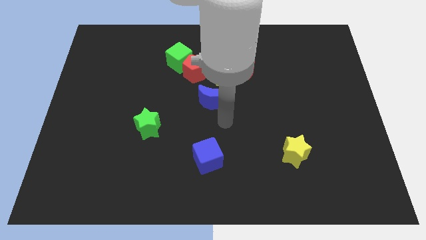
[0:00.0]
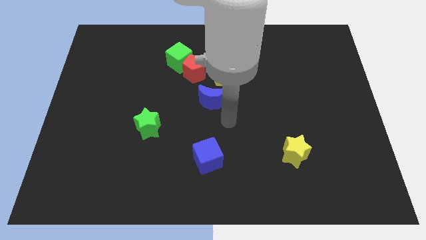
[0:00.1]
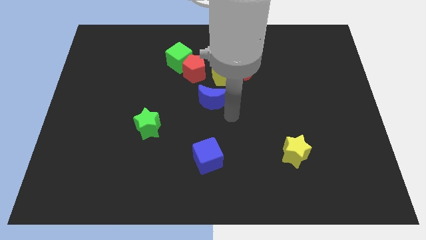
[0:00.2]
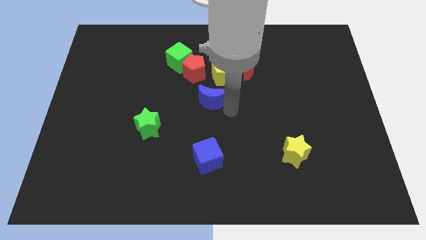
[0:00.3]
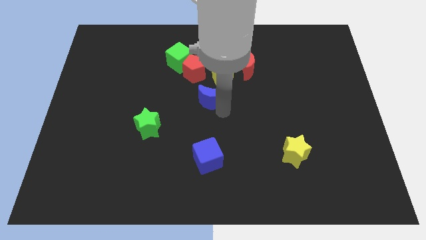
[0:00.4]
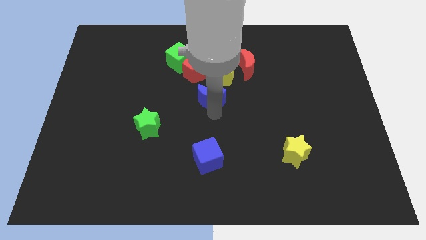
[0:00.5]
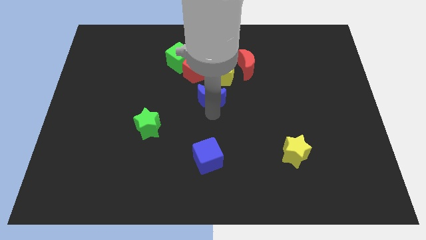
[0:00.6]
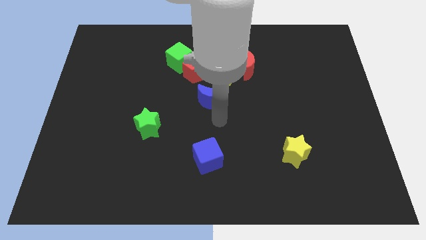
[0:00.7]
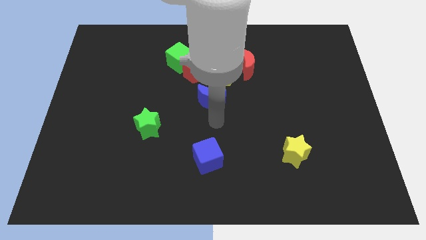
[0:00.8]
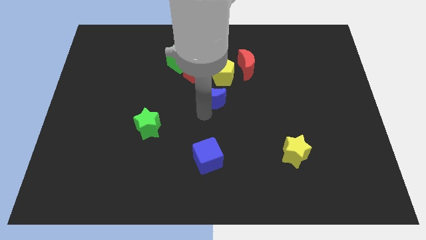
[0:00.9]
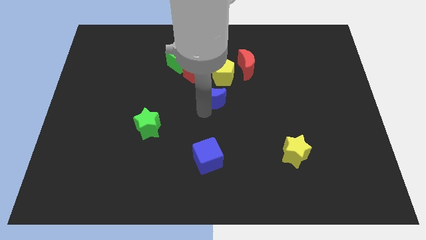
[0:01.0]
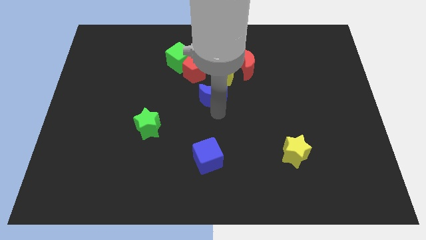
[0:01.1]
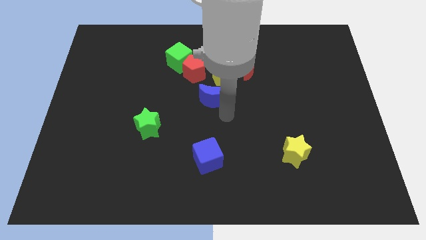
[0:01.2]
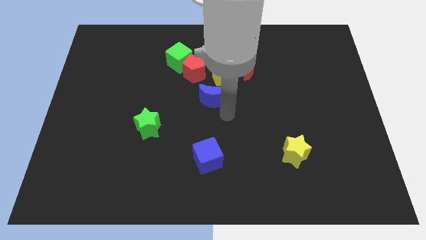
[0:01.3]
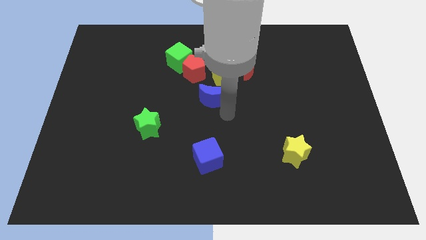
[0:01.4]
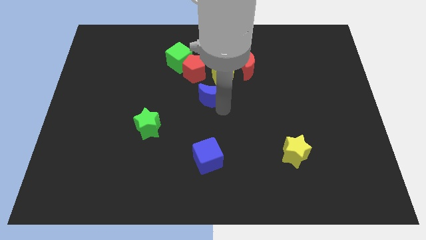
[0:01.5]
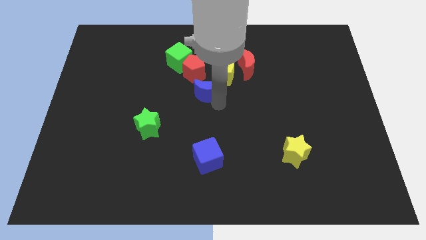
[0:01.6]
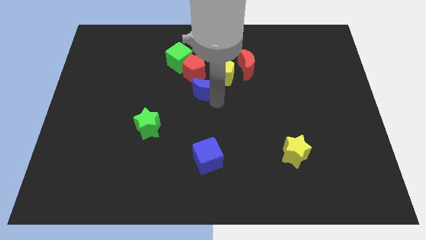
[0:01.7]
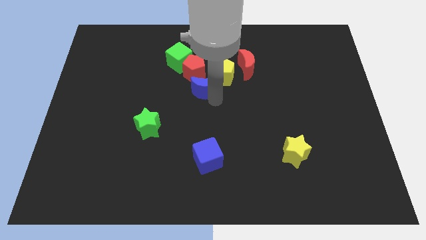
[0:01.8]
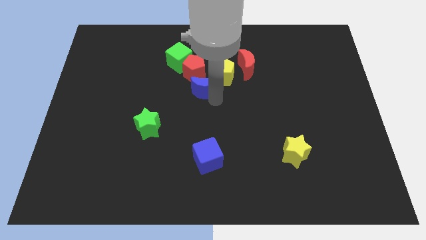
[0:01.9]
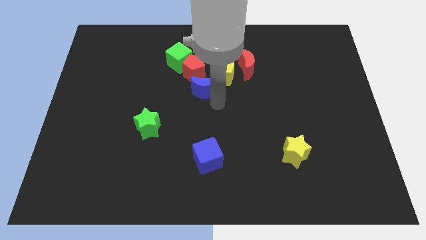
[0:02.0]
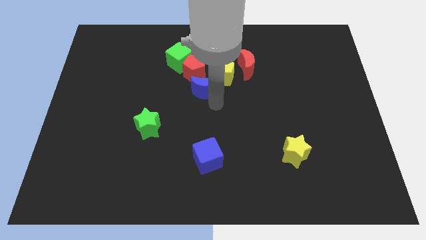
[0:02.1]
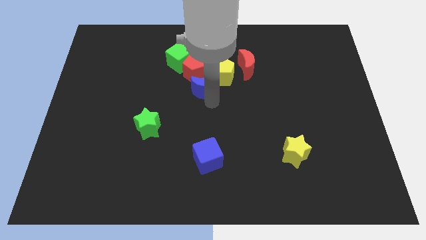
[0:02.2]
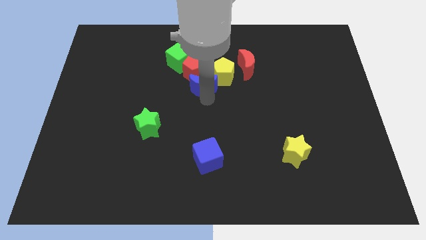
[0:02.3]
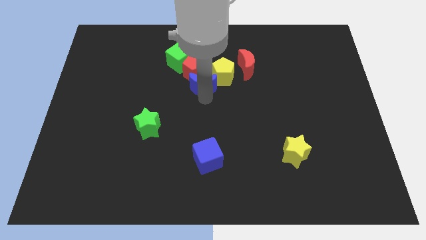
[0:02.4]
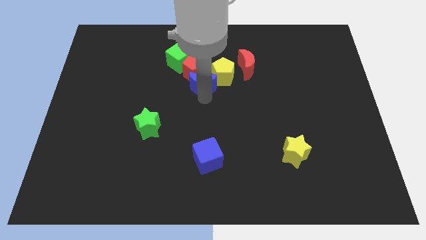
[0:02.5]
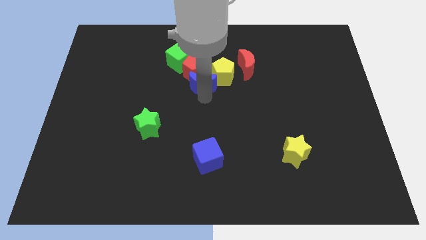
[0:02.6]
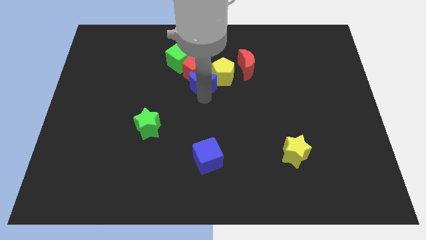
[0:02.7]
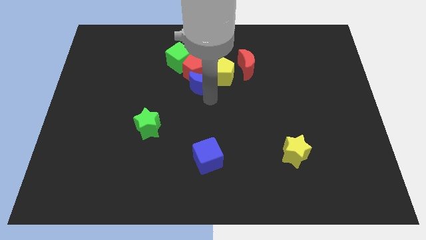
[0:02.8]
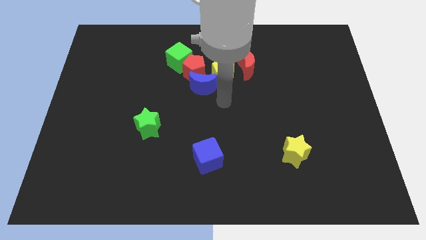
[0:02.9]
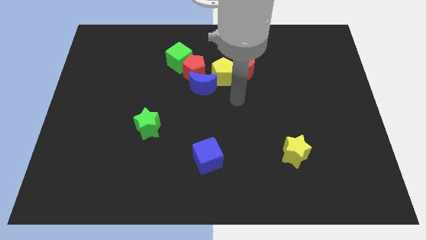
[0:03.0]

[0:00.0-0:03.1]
move the blue crescent below the red pentagon

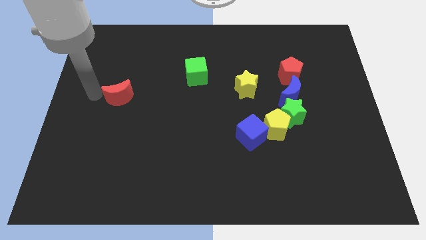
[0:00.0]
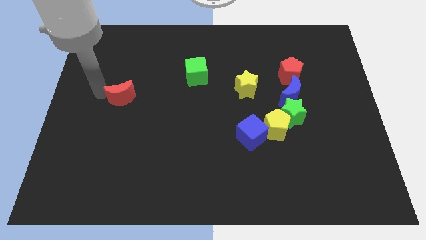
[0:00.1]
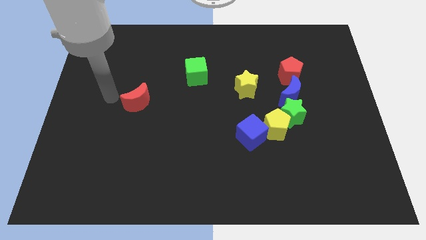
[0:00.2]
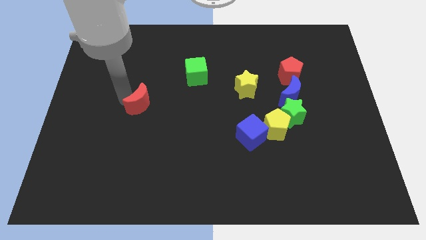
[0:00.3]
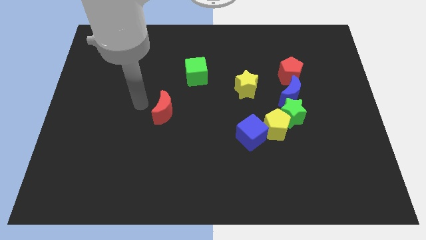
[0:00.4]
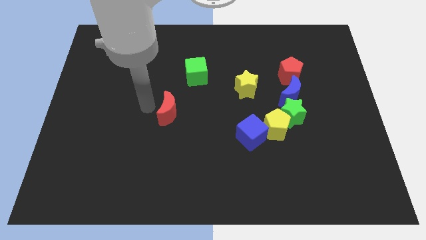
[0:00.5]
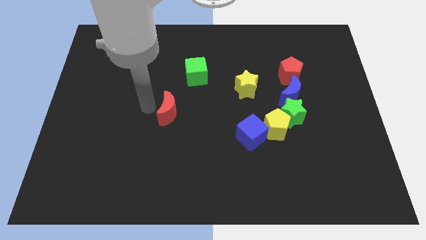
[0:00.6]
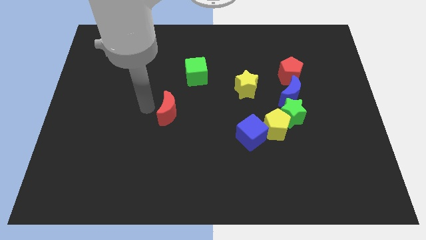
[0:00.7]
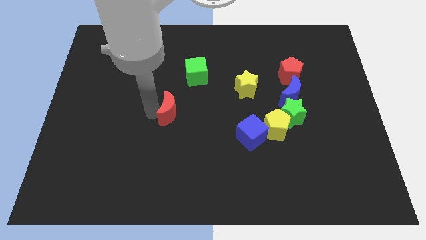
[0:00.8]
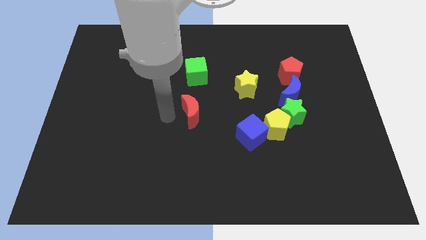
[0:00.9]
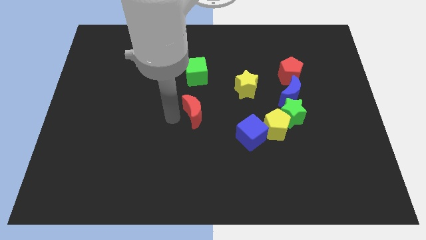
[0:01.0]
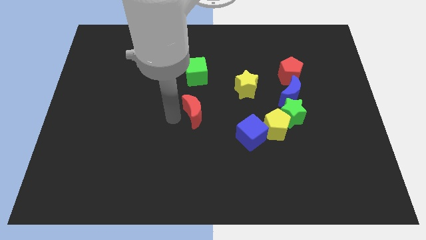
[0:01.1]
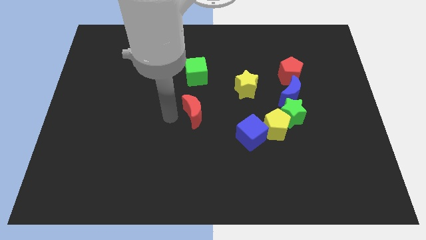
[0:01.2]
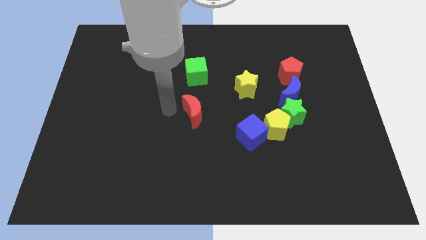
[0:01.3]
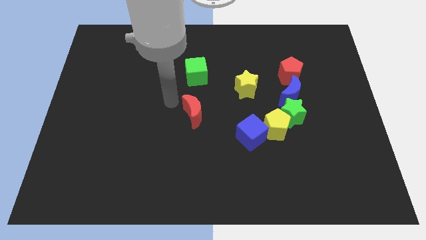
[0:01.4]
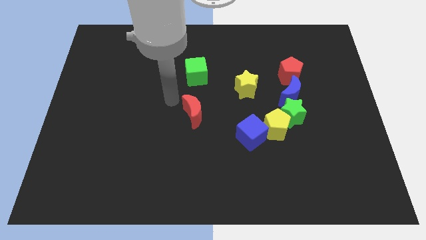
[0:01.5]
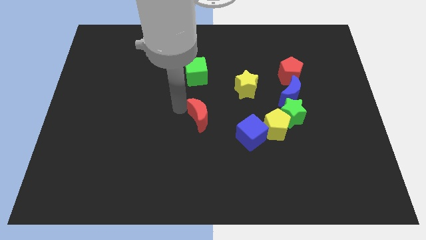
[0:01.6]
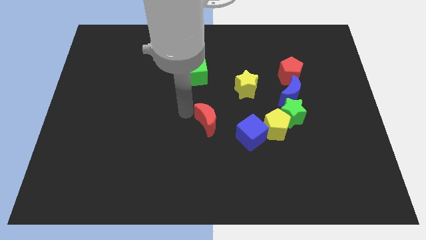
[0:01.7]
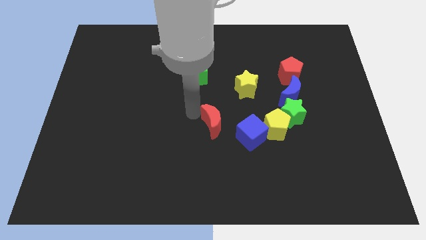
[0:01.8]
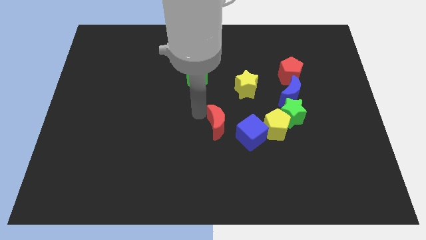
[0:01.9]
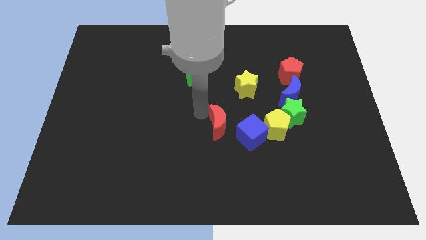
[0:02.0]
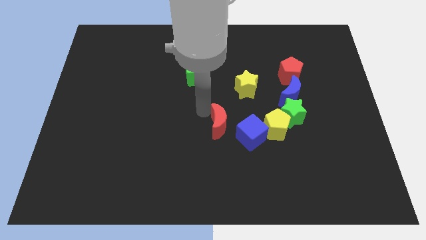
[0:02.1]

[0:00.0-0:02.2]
push the red moon to the center

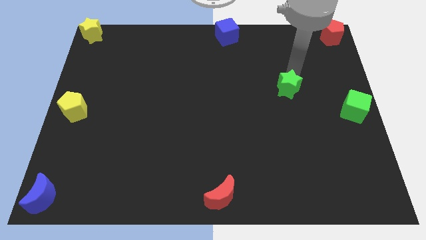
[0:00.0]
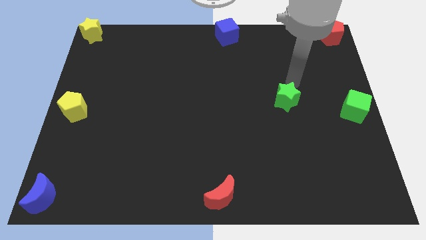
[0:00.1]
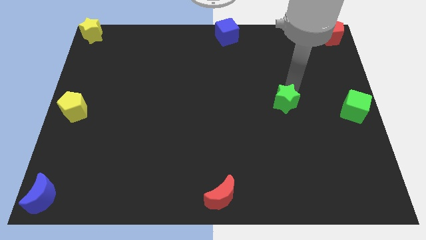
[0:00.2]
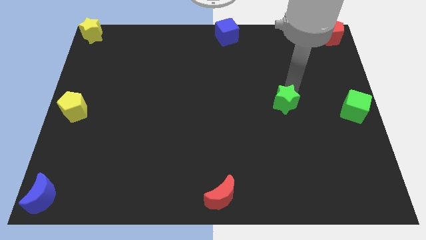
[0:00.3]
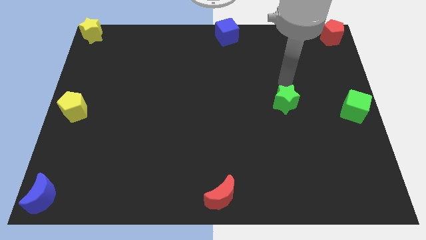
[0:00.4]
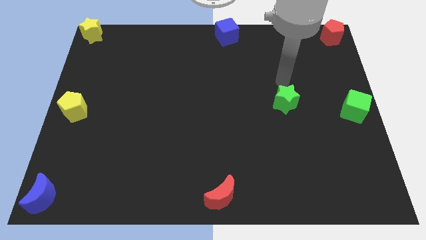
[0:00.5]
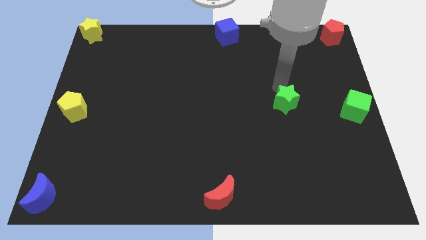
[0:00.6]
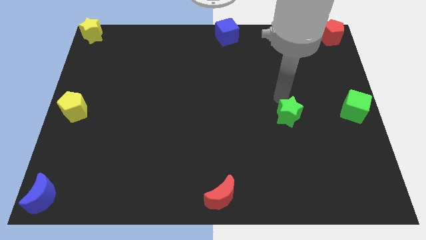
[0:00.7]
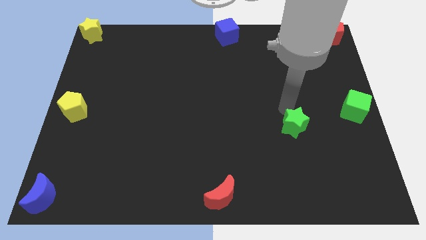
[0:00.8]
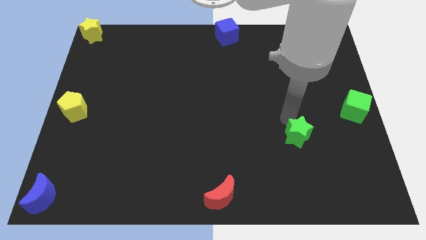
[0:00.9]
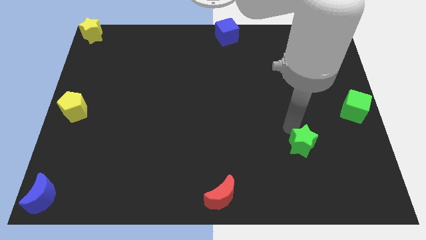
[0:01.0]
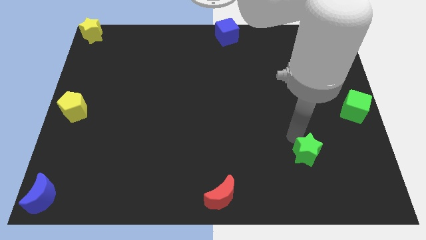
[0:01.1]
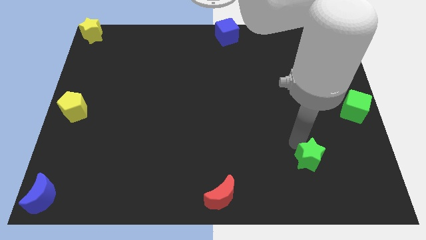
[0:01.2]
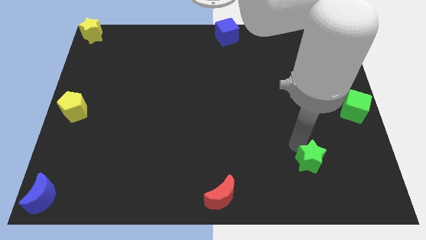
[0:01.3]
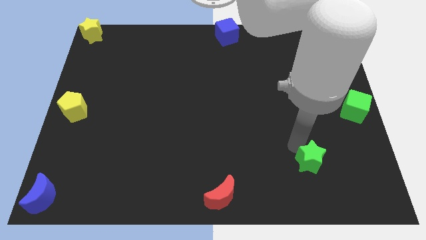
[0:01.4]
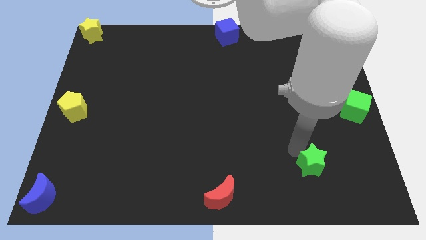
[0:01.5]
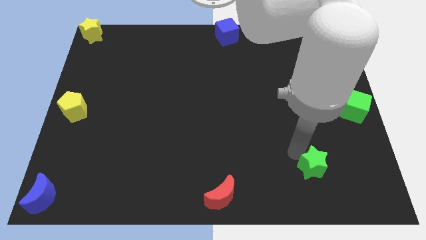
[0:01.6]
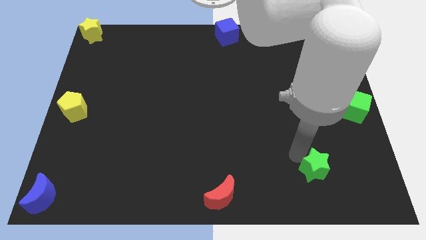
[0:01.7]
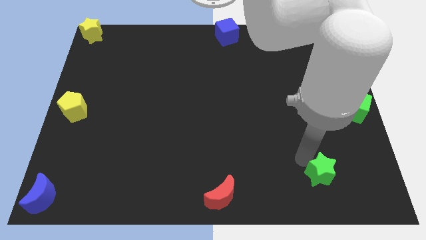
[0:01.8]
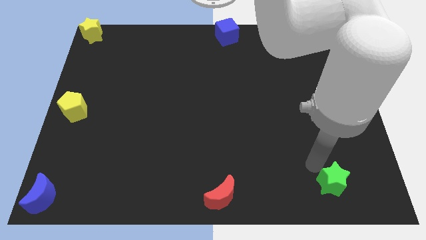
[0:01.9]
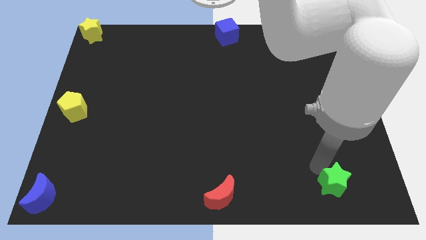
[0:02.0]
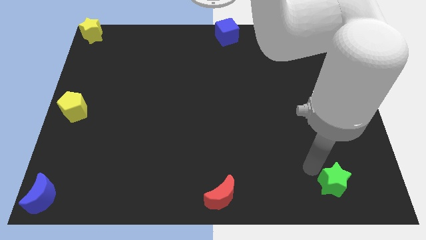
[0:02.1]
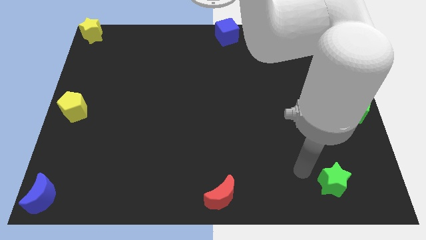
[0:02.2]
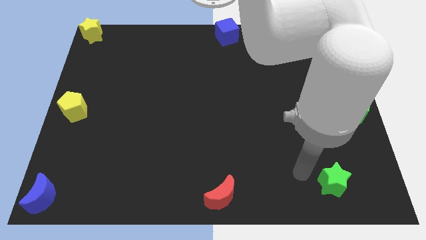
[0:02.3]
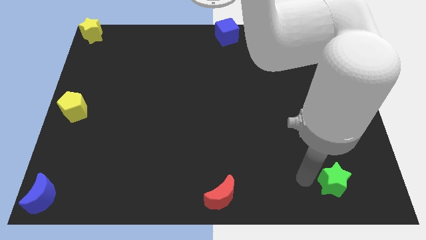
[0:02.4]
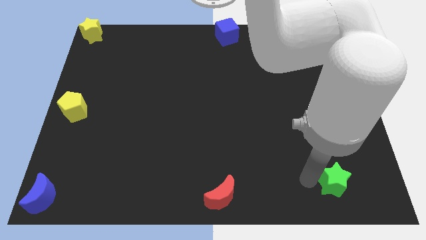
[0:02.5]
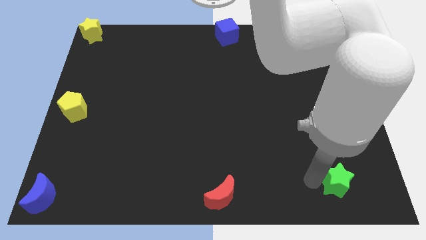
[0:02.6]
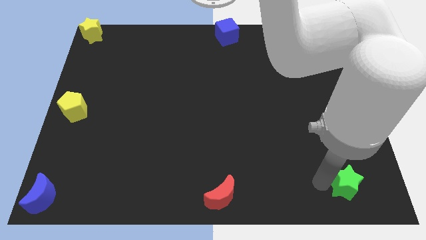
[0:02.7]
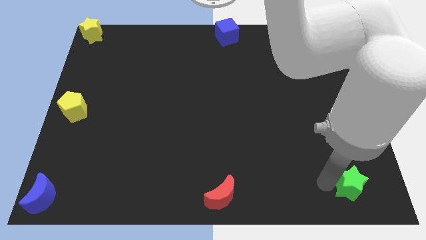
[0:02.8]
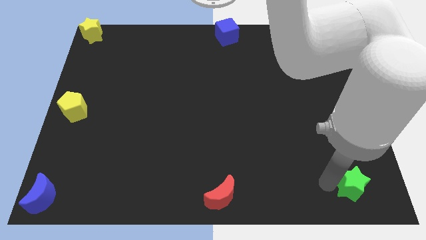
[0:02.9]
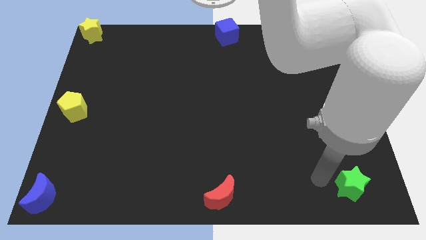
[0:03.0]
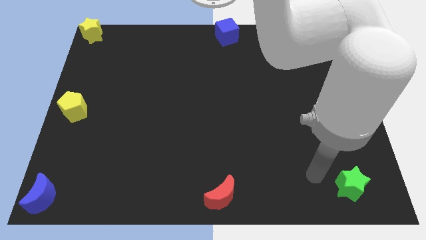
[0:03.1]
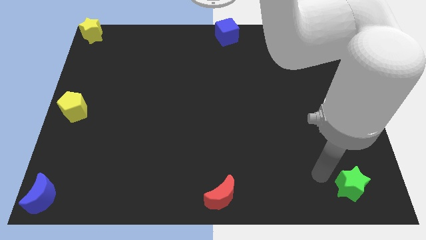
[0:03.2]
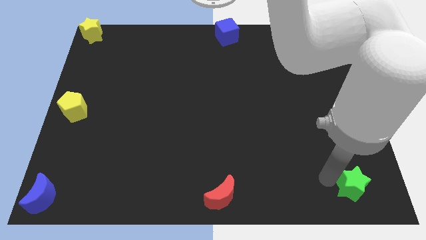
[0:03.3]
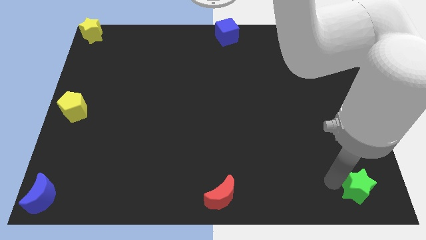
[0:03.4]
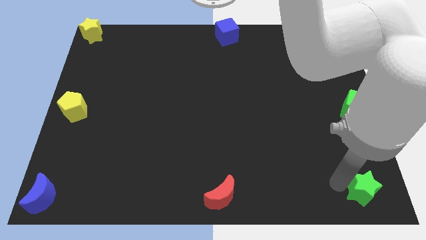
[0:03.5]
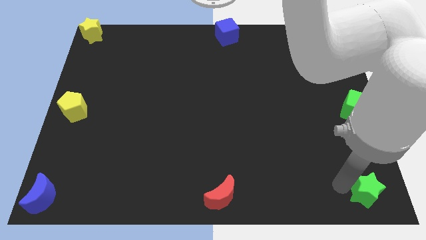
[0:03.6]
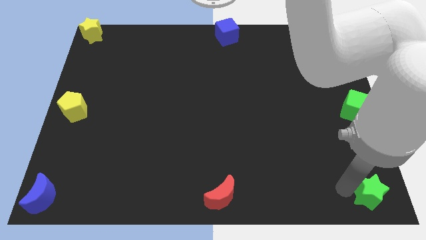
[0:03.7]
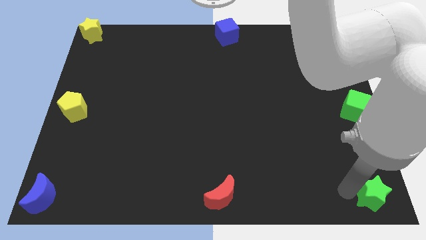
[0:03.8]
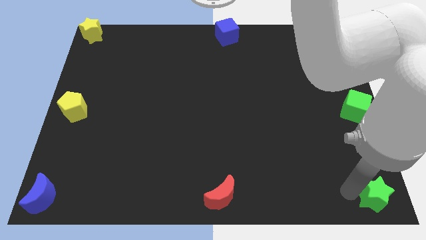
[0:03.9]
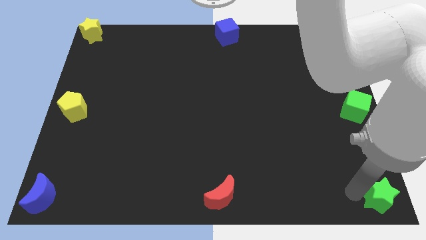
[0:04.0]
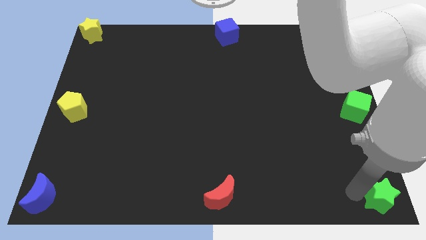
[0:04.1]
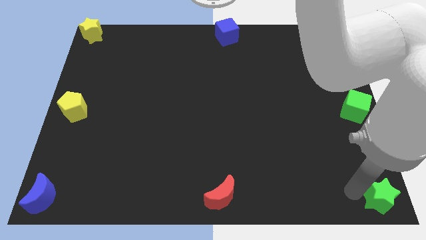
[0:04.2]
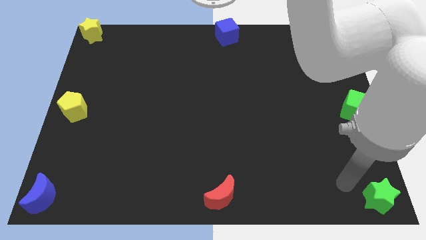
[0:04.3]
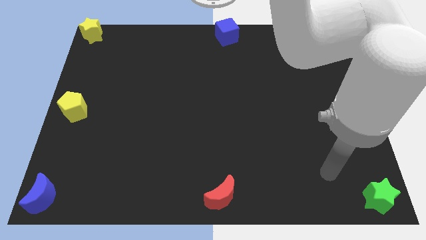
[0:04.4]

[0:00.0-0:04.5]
place green star to the bottom right corner of the board
